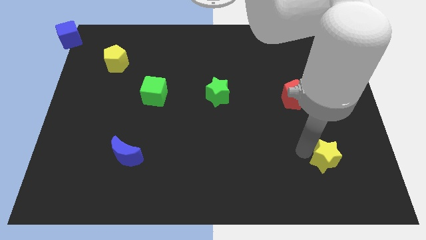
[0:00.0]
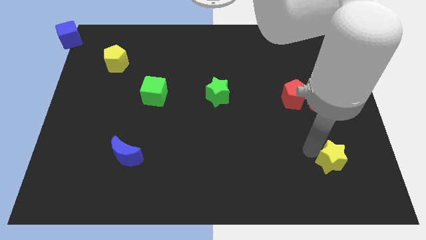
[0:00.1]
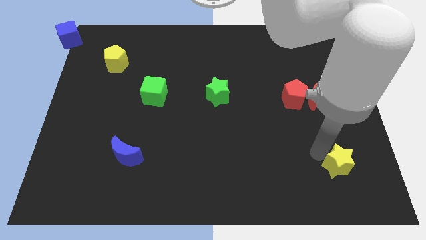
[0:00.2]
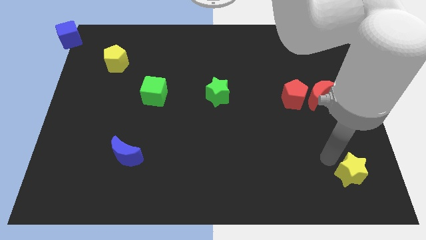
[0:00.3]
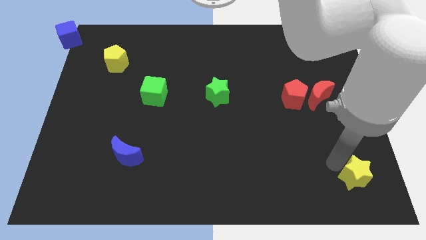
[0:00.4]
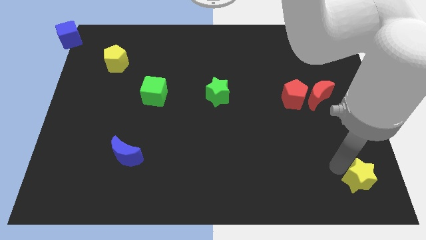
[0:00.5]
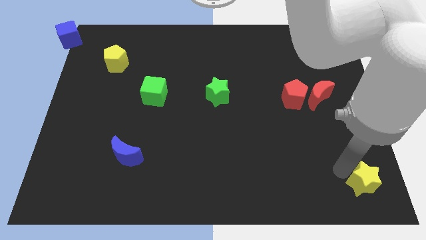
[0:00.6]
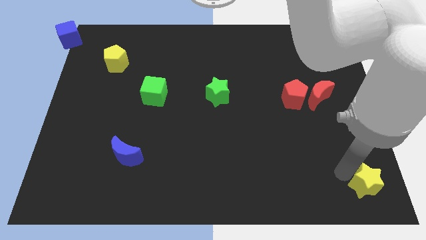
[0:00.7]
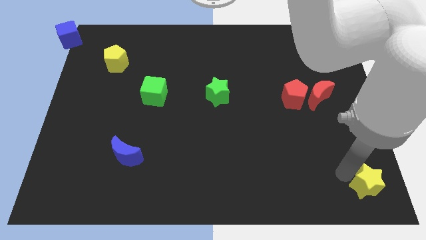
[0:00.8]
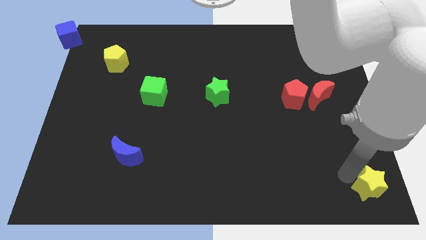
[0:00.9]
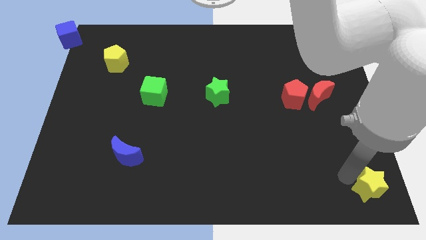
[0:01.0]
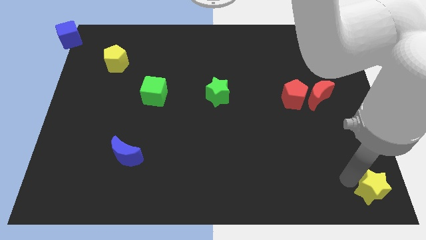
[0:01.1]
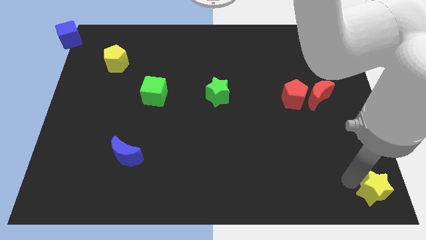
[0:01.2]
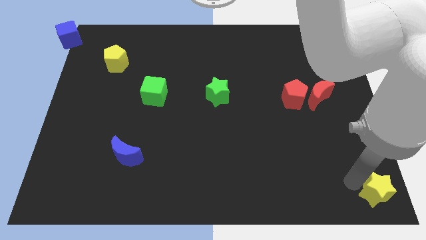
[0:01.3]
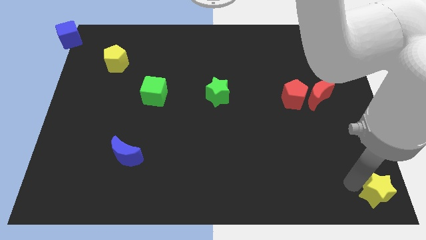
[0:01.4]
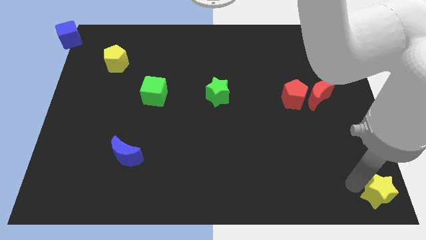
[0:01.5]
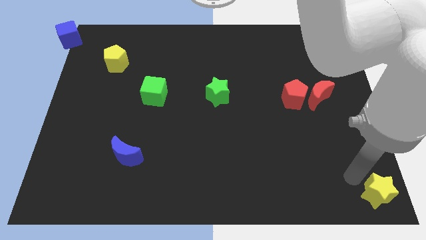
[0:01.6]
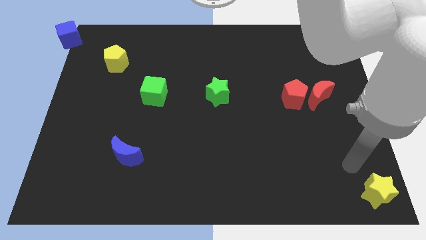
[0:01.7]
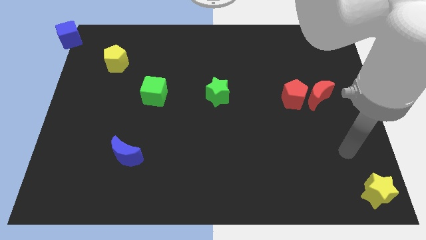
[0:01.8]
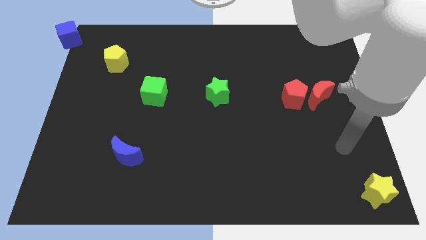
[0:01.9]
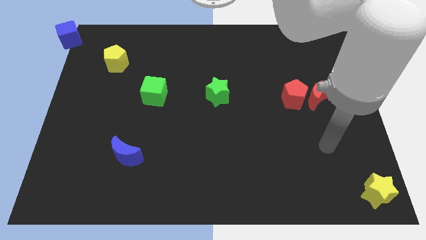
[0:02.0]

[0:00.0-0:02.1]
push the yellow star to the bottom right corner of the board

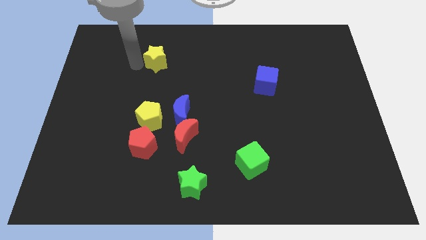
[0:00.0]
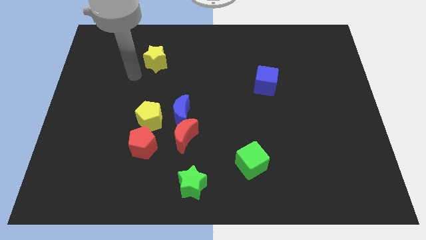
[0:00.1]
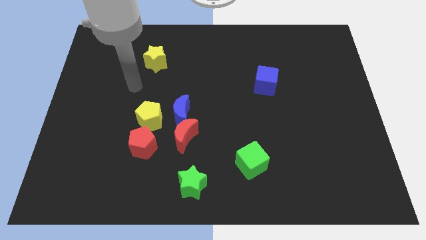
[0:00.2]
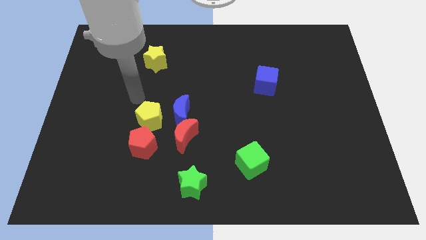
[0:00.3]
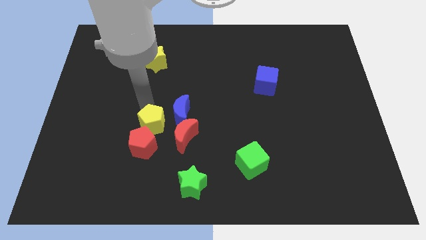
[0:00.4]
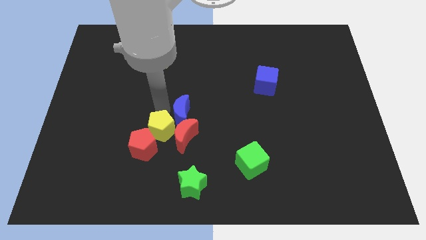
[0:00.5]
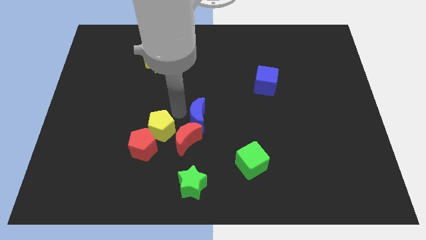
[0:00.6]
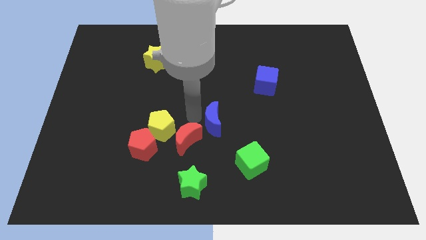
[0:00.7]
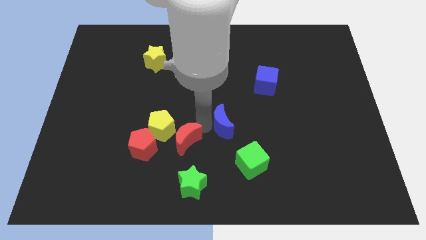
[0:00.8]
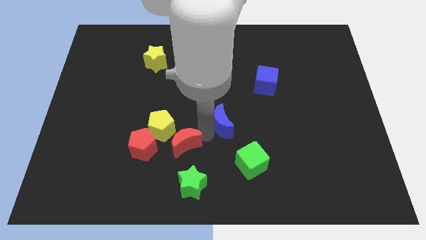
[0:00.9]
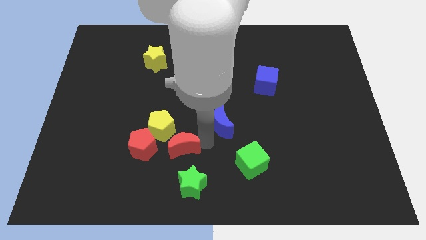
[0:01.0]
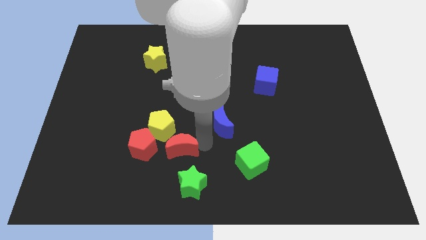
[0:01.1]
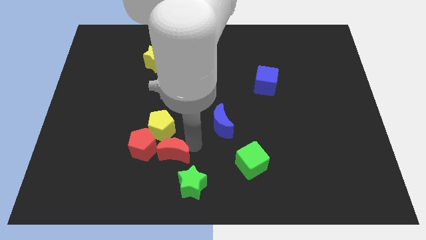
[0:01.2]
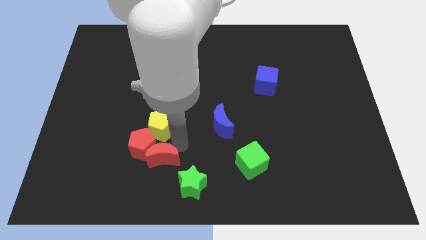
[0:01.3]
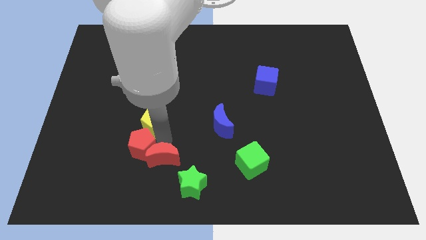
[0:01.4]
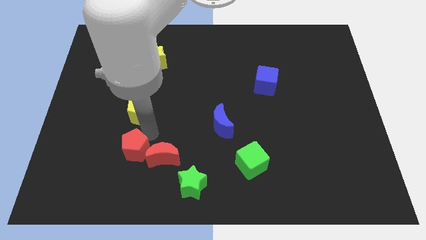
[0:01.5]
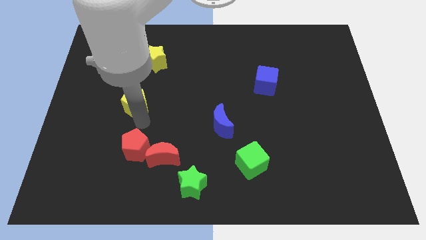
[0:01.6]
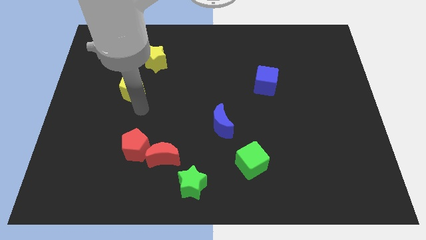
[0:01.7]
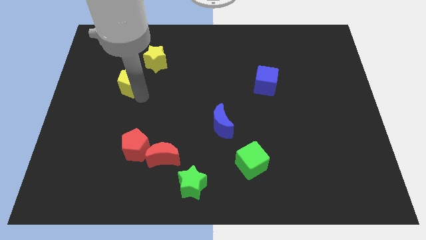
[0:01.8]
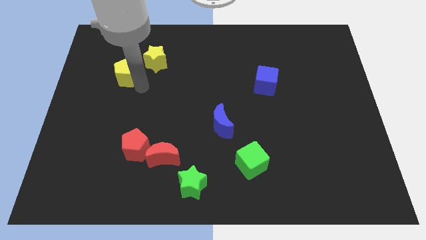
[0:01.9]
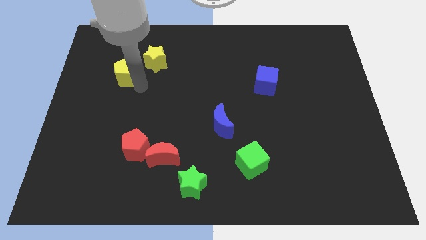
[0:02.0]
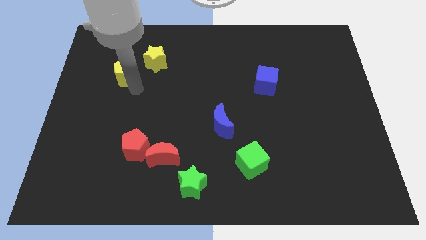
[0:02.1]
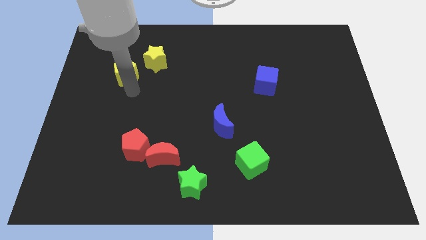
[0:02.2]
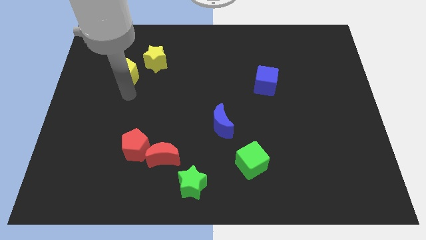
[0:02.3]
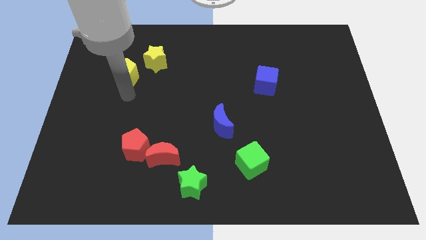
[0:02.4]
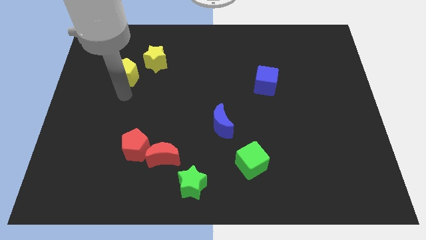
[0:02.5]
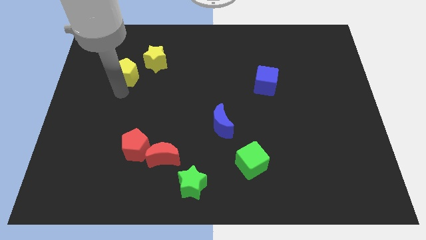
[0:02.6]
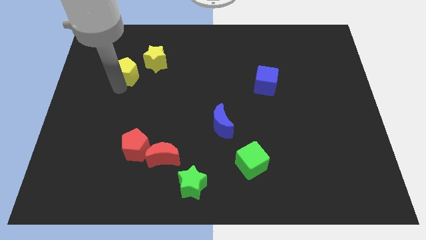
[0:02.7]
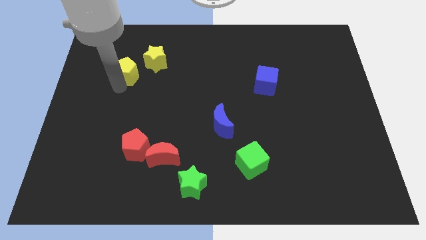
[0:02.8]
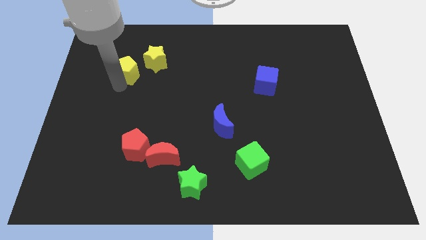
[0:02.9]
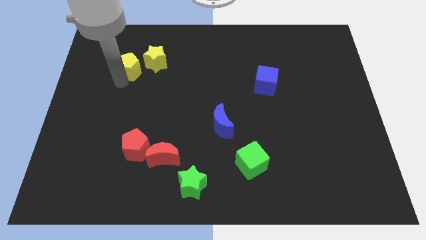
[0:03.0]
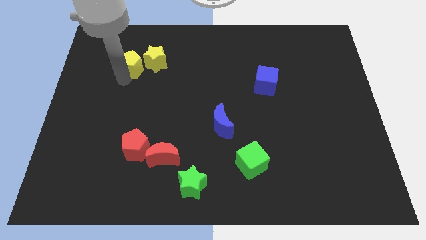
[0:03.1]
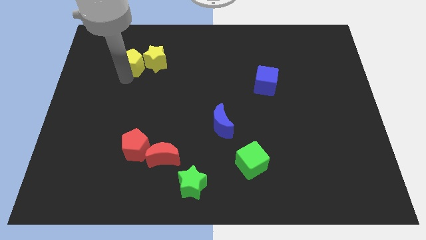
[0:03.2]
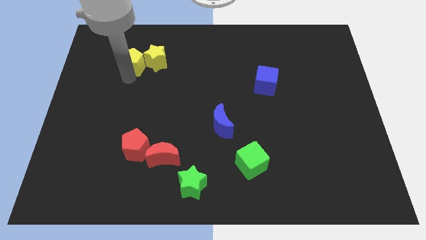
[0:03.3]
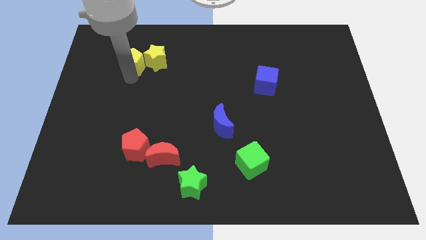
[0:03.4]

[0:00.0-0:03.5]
move yellow pentagon left beside the yellow star

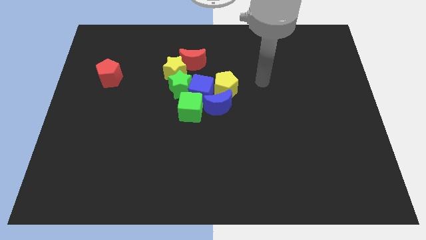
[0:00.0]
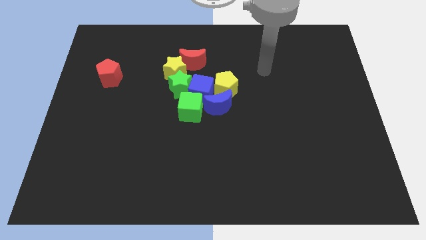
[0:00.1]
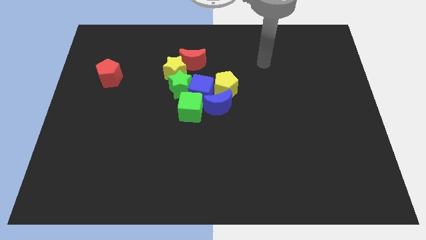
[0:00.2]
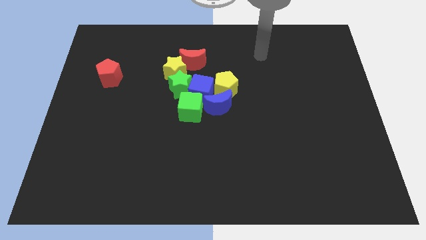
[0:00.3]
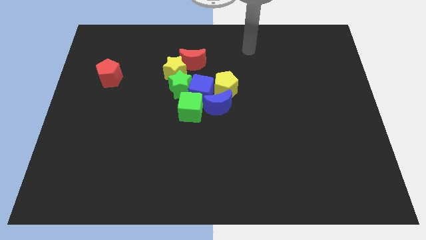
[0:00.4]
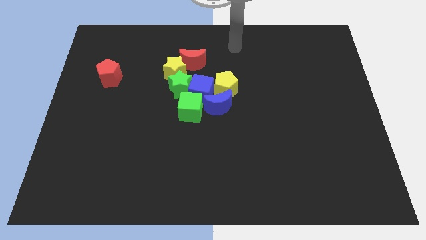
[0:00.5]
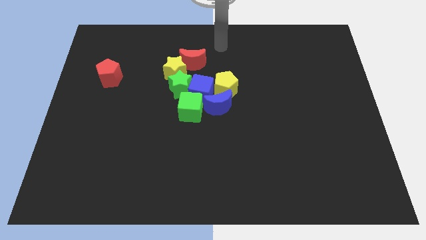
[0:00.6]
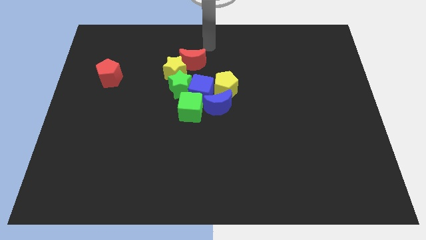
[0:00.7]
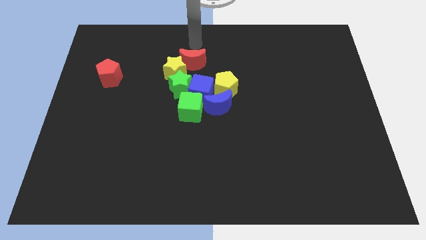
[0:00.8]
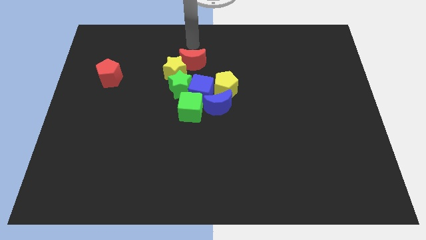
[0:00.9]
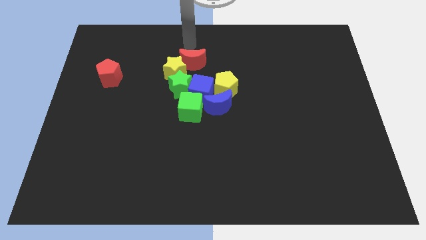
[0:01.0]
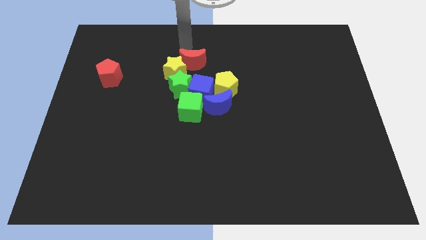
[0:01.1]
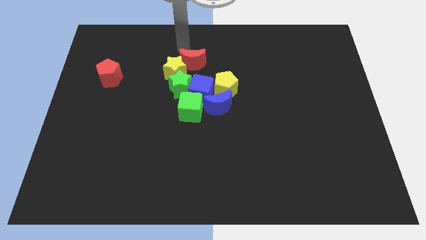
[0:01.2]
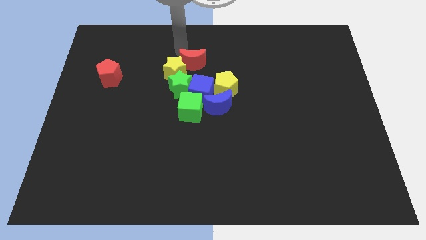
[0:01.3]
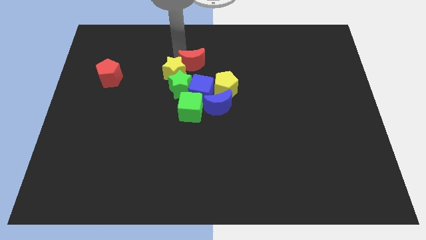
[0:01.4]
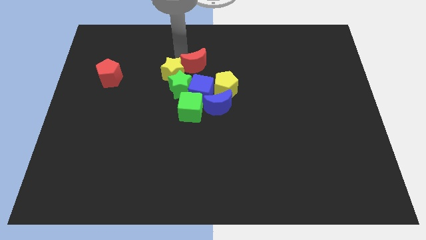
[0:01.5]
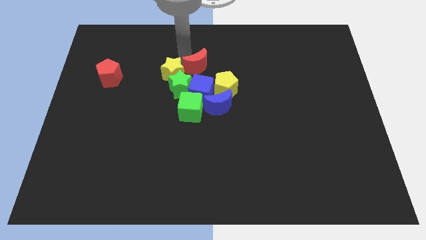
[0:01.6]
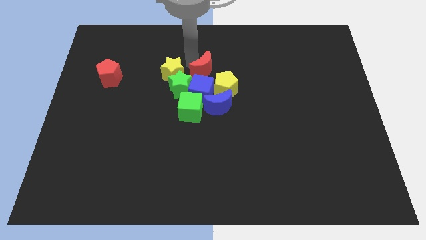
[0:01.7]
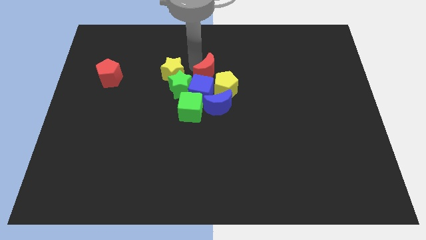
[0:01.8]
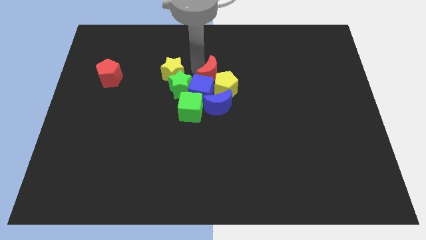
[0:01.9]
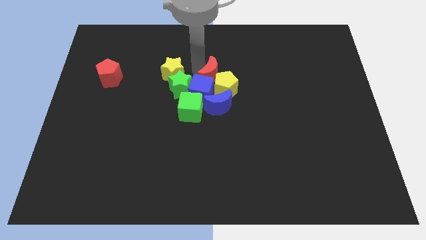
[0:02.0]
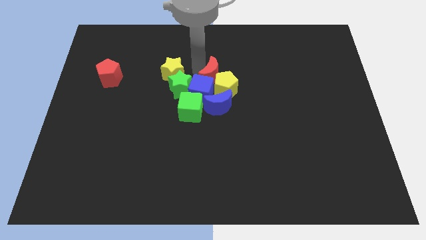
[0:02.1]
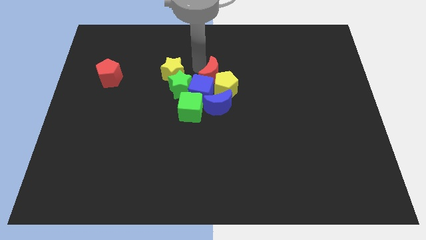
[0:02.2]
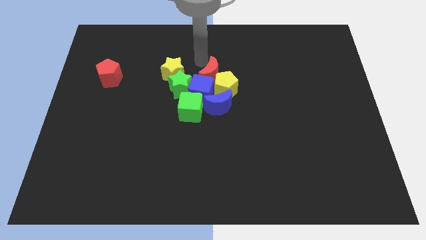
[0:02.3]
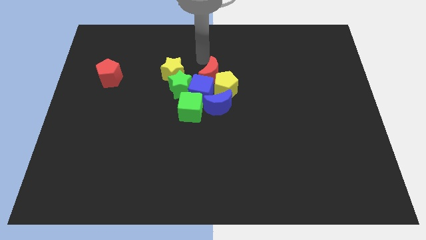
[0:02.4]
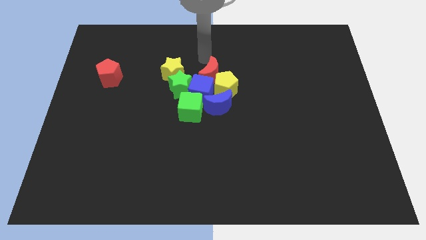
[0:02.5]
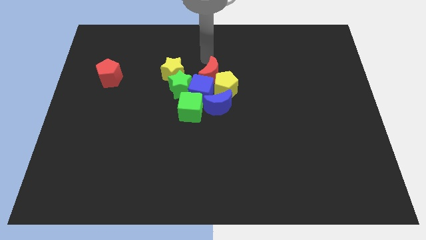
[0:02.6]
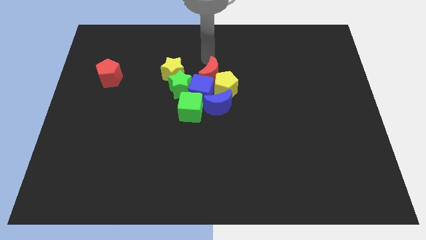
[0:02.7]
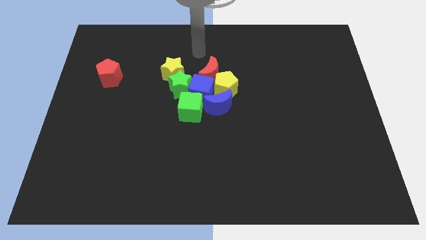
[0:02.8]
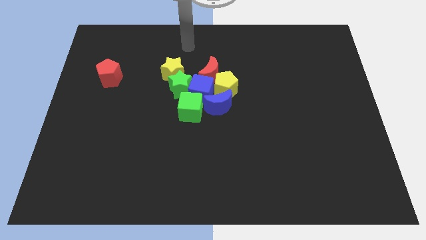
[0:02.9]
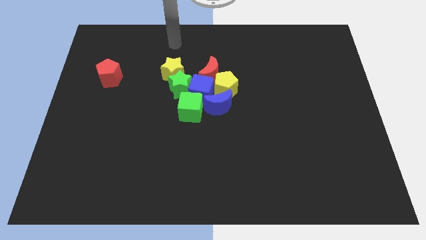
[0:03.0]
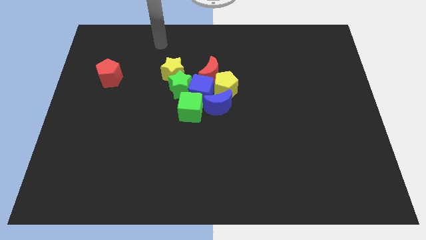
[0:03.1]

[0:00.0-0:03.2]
move the red crescent to the top of the blue cube

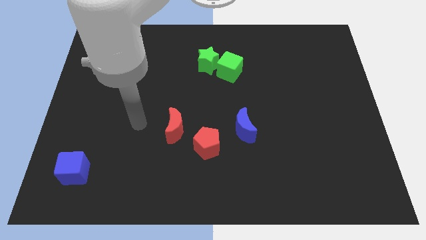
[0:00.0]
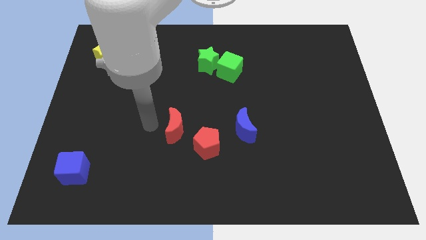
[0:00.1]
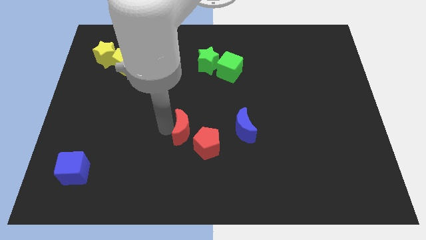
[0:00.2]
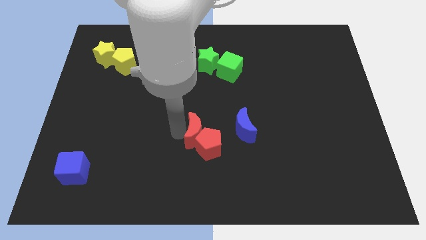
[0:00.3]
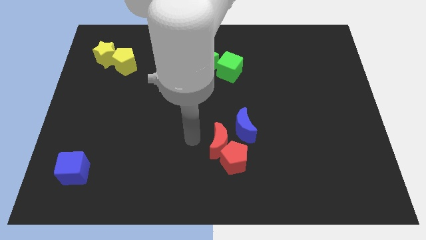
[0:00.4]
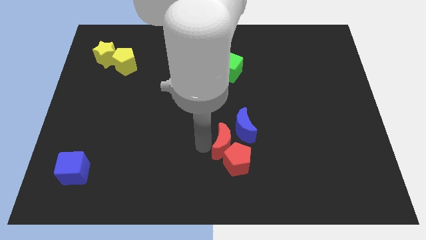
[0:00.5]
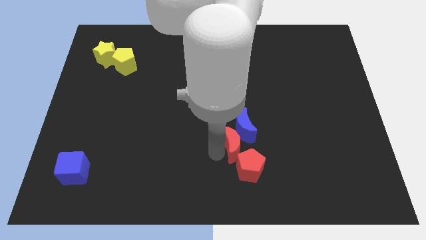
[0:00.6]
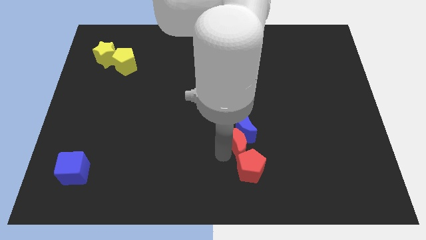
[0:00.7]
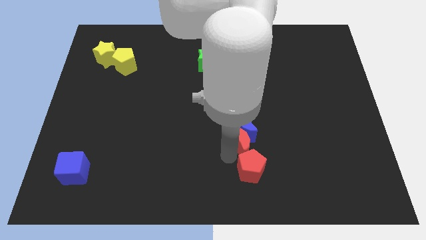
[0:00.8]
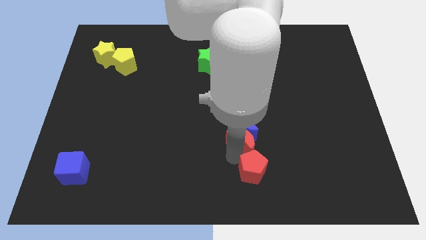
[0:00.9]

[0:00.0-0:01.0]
push the red moon into the red pentagon
